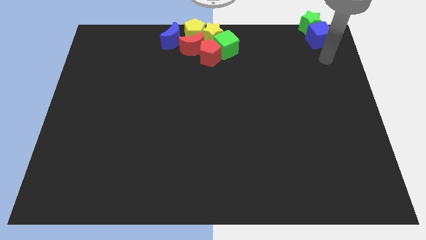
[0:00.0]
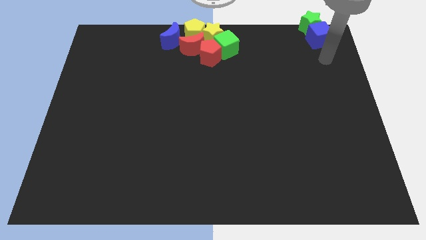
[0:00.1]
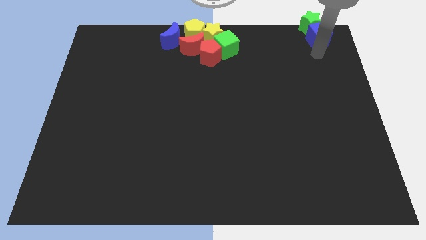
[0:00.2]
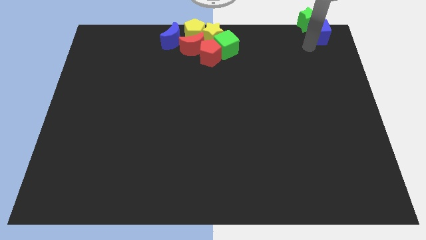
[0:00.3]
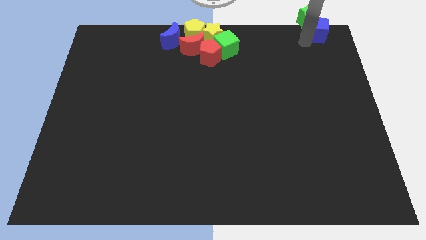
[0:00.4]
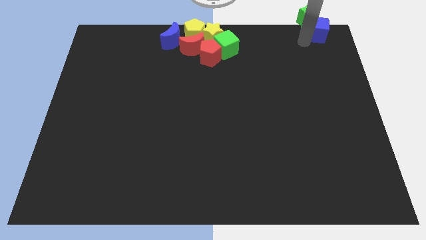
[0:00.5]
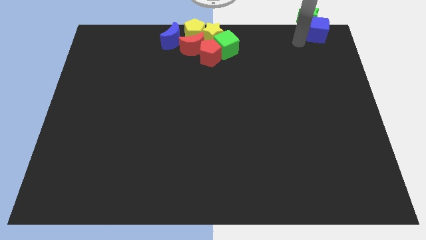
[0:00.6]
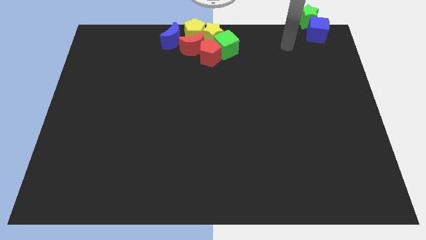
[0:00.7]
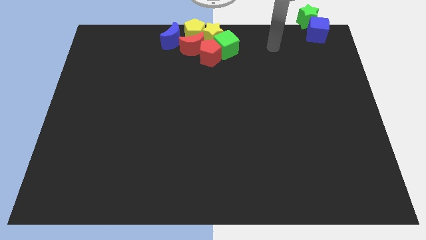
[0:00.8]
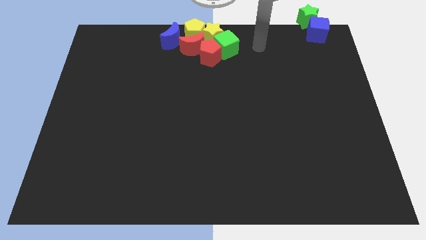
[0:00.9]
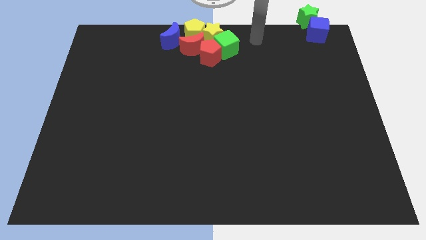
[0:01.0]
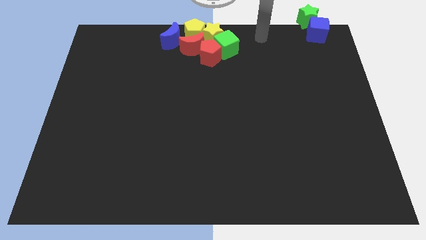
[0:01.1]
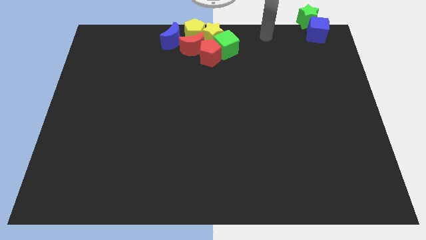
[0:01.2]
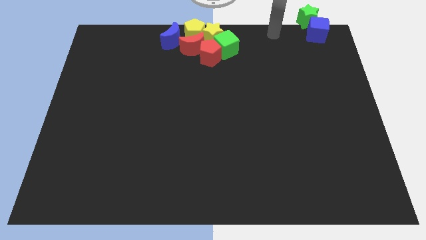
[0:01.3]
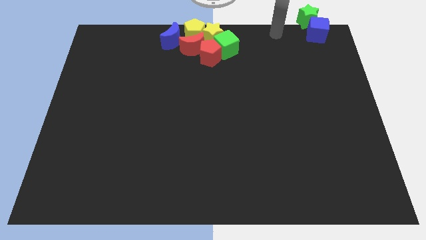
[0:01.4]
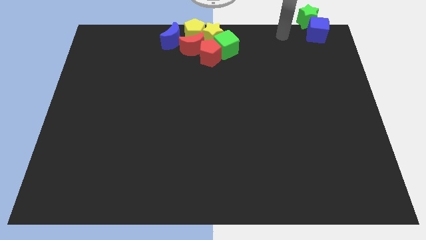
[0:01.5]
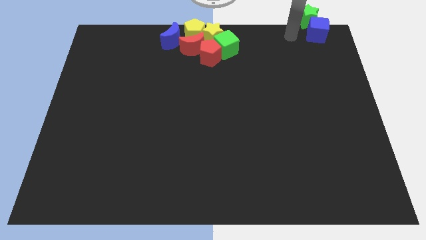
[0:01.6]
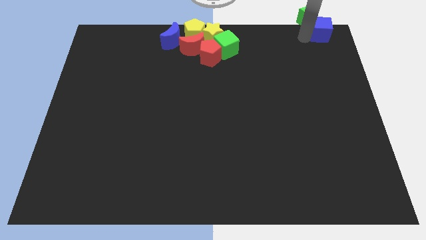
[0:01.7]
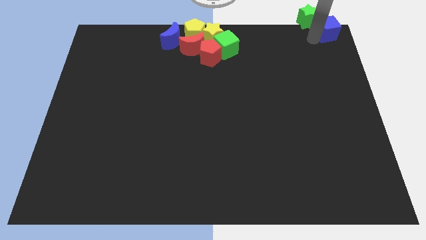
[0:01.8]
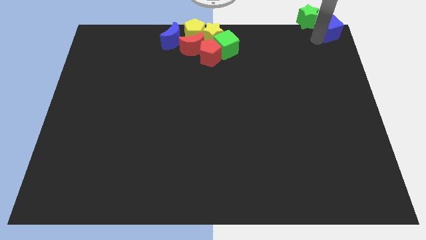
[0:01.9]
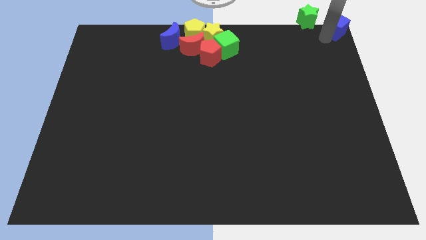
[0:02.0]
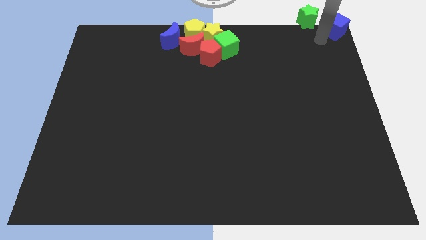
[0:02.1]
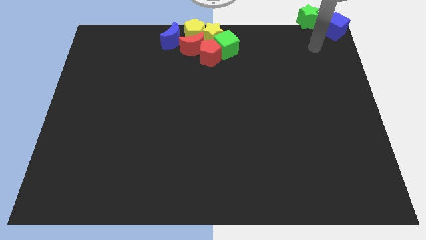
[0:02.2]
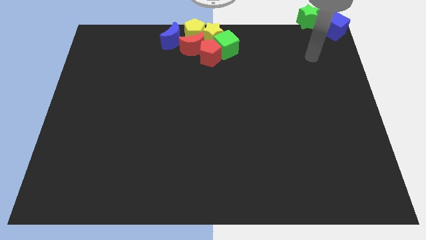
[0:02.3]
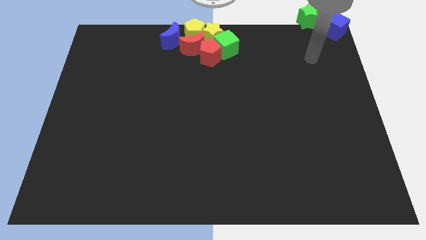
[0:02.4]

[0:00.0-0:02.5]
drag blue cube towards top right corner of the board

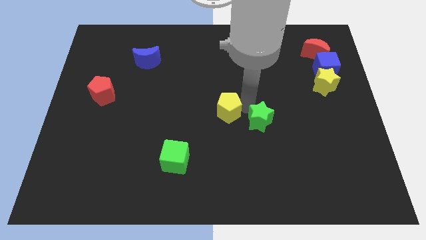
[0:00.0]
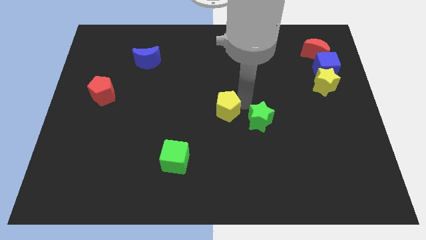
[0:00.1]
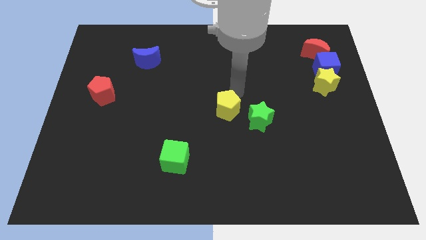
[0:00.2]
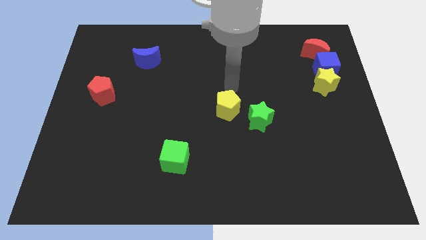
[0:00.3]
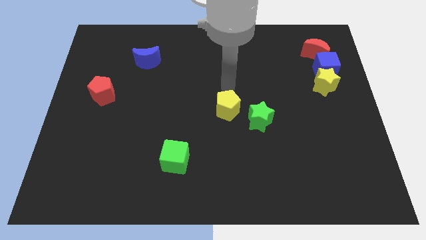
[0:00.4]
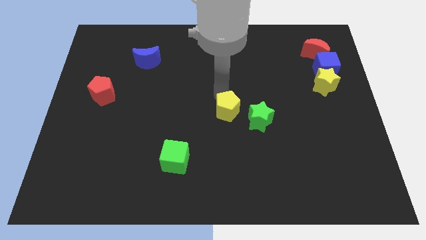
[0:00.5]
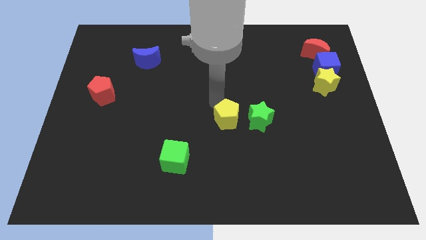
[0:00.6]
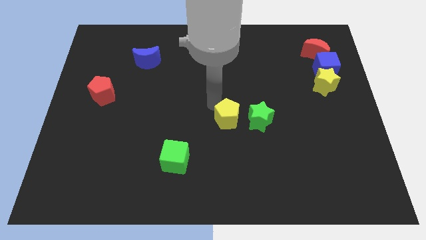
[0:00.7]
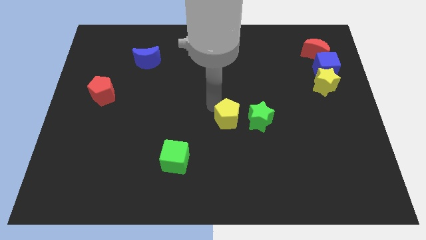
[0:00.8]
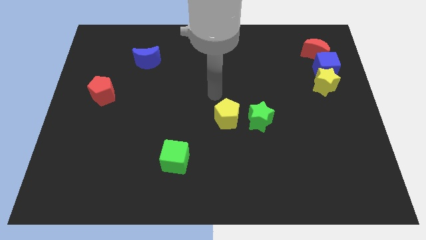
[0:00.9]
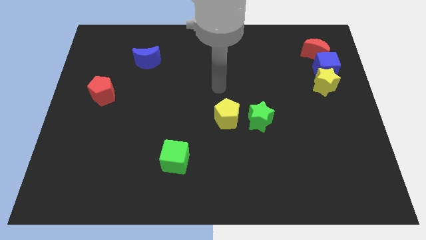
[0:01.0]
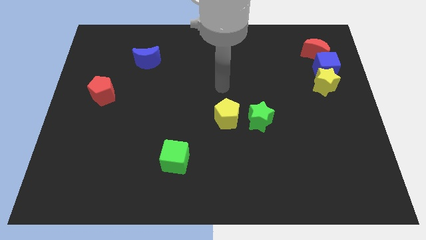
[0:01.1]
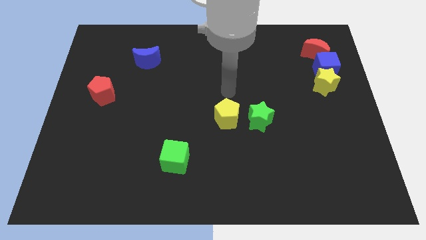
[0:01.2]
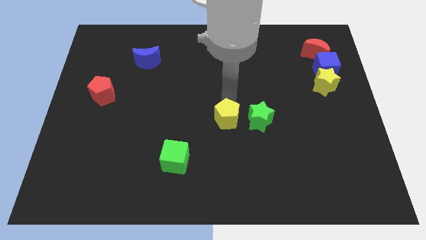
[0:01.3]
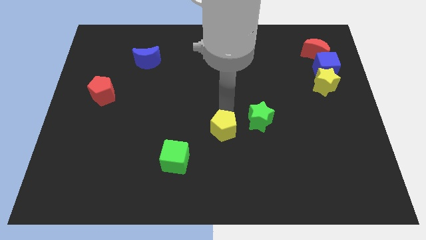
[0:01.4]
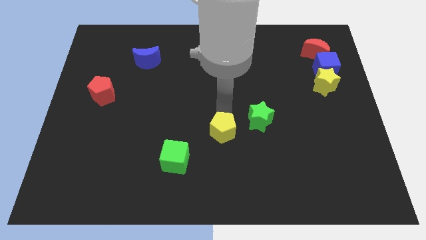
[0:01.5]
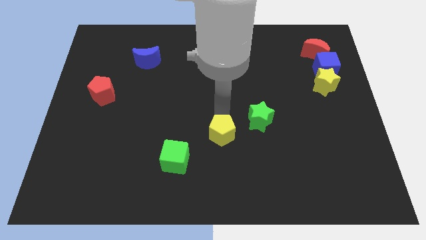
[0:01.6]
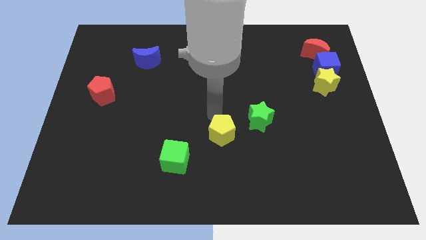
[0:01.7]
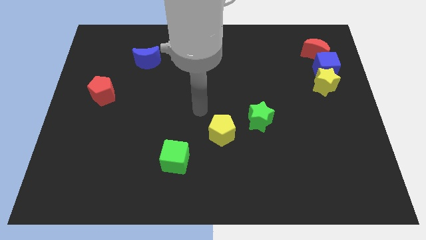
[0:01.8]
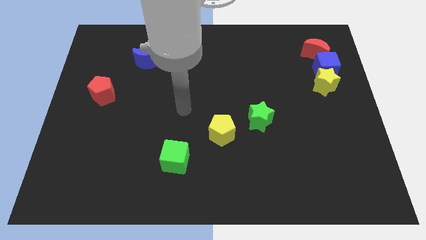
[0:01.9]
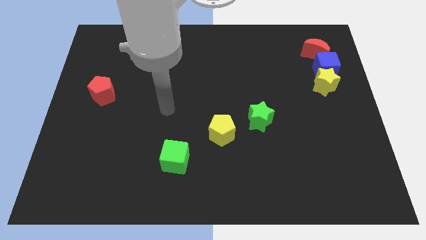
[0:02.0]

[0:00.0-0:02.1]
place yellow pentagon in between green blocks

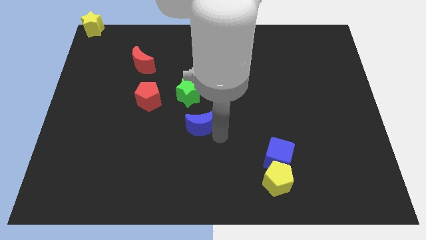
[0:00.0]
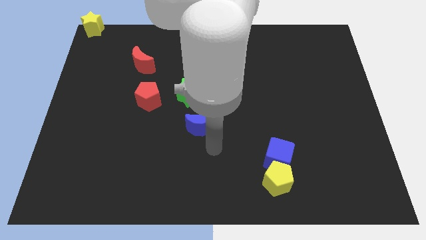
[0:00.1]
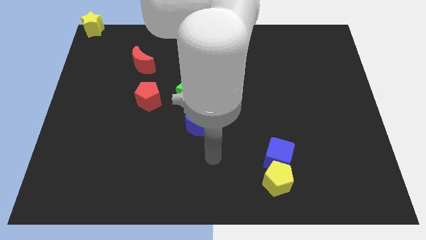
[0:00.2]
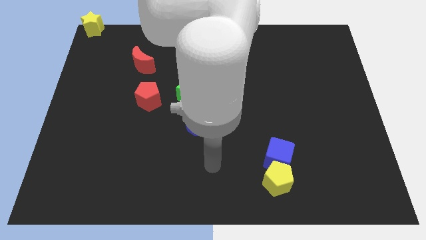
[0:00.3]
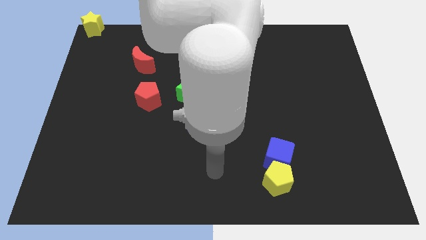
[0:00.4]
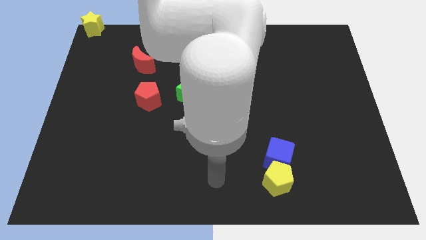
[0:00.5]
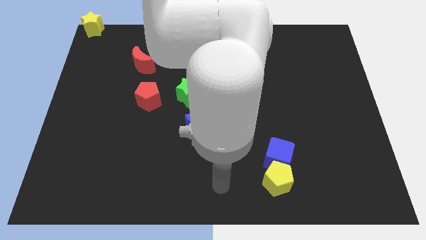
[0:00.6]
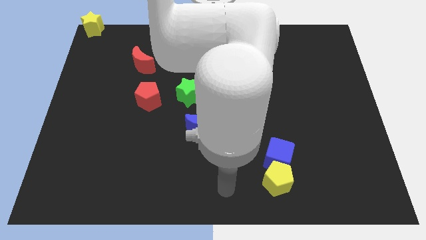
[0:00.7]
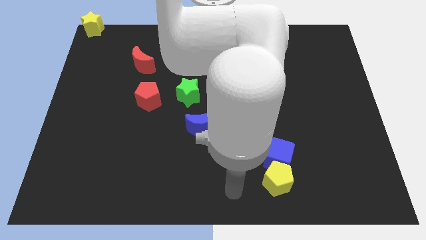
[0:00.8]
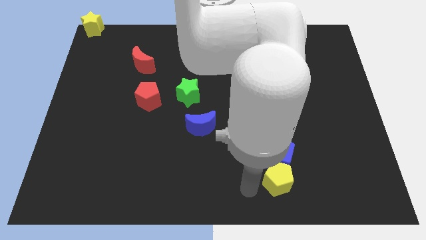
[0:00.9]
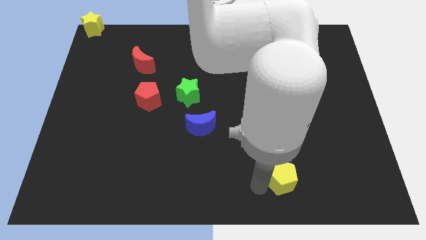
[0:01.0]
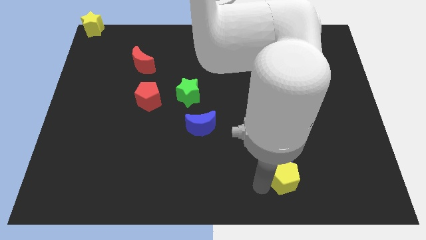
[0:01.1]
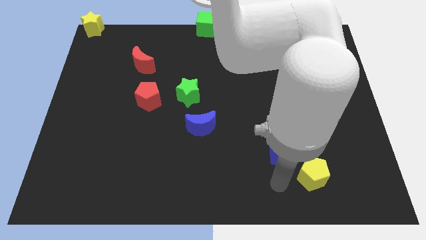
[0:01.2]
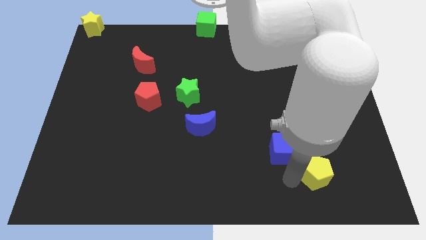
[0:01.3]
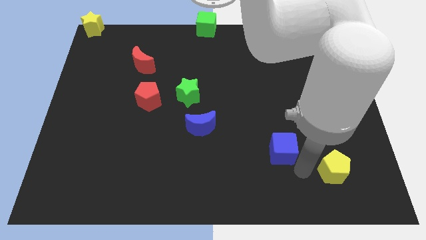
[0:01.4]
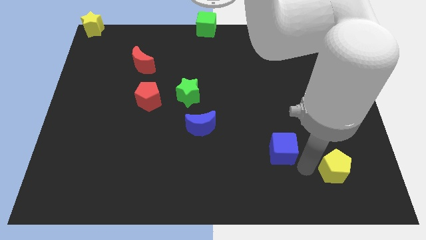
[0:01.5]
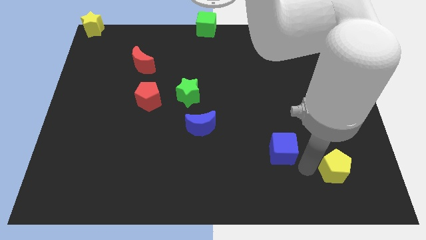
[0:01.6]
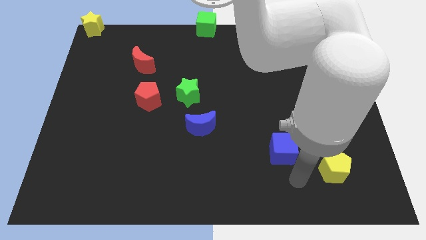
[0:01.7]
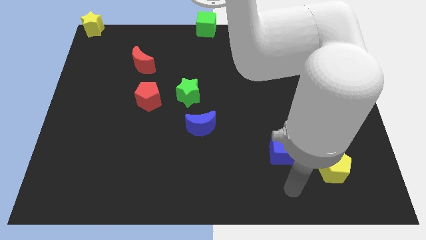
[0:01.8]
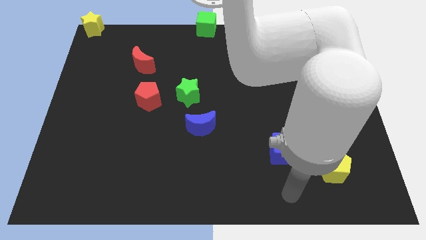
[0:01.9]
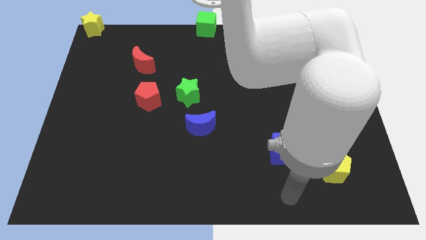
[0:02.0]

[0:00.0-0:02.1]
separate yellow pentagon from blue cube

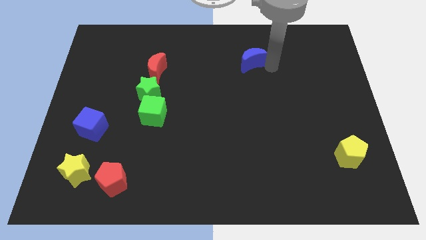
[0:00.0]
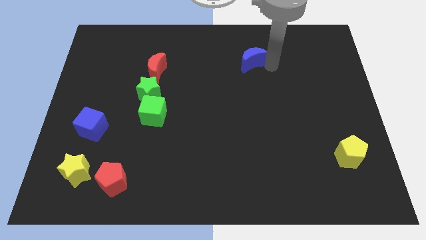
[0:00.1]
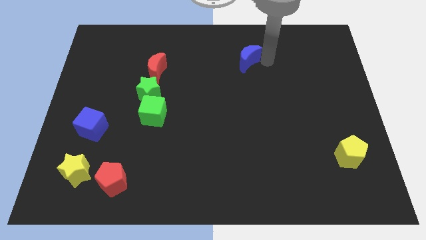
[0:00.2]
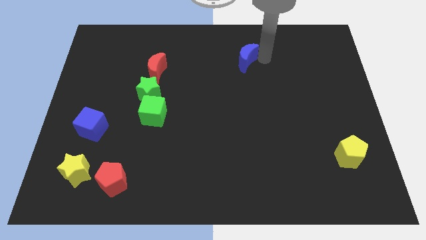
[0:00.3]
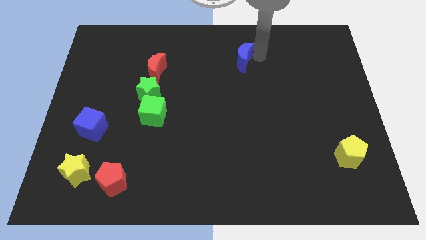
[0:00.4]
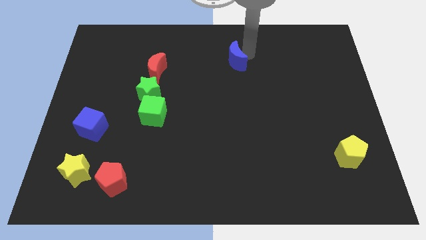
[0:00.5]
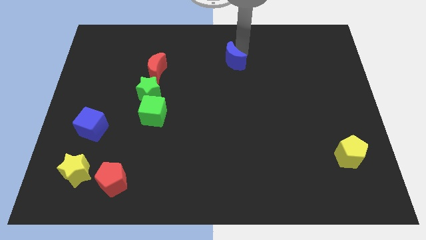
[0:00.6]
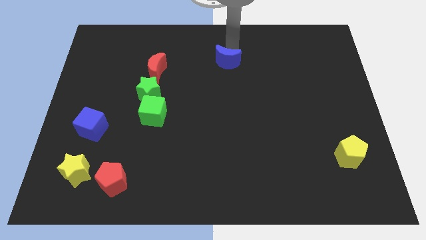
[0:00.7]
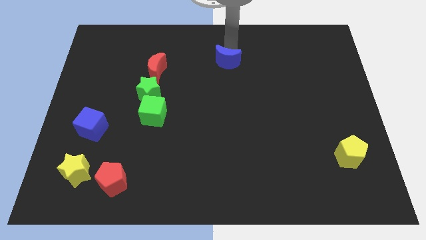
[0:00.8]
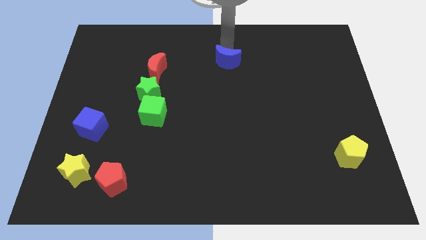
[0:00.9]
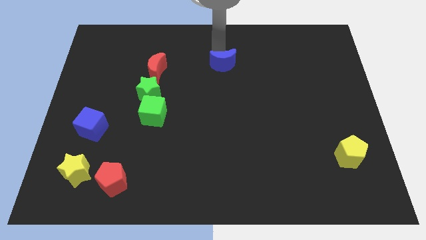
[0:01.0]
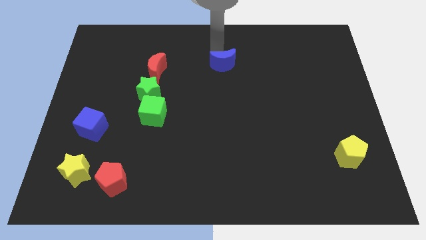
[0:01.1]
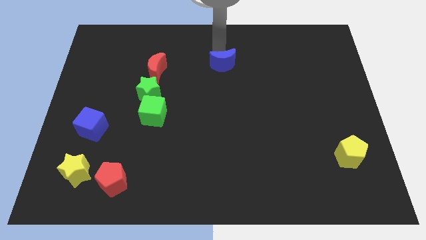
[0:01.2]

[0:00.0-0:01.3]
move the blue moon towards the left

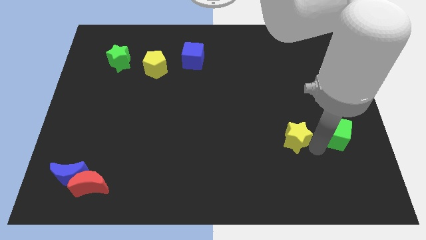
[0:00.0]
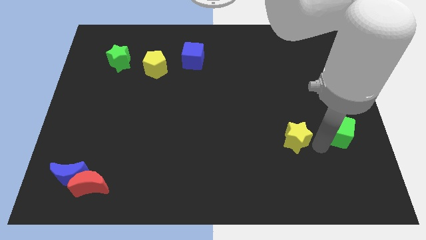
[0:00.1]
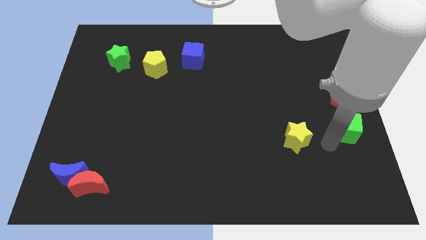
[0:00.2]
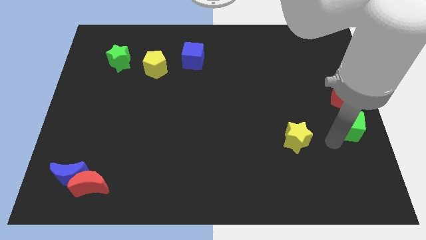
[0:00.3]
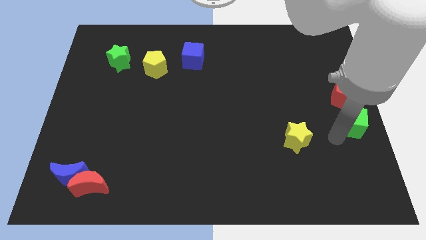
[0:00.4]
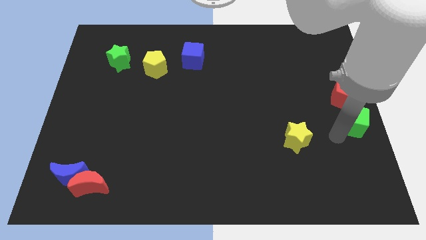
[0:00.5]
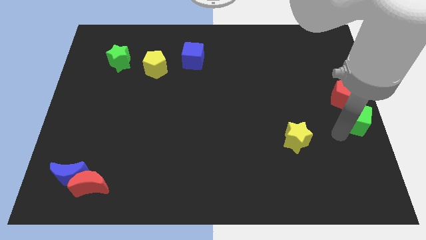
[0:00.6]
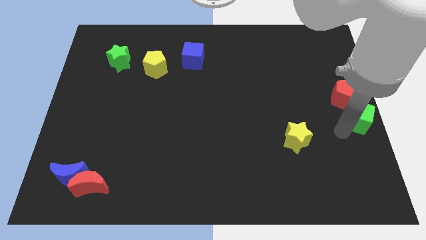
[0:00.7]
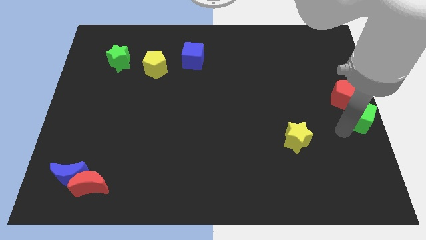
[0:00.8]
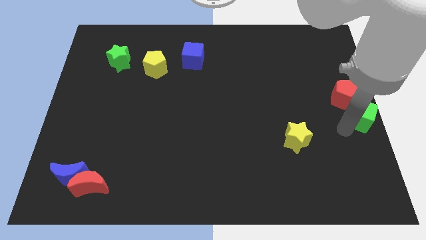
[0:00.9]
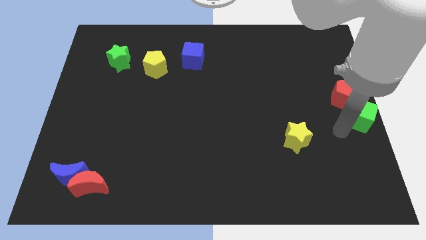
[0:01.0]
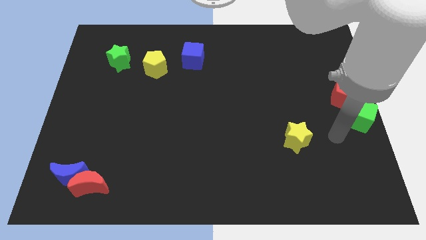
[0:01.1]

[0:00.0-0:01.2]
place the green cube to the bottom side of the red pentagon
